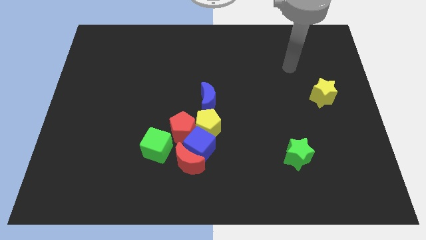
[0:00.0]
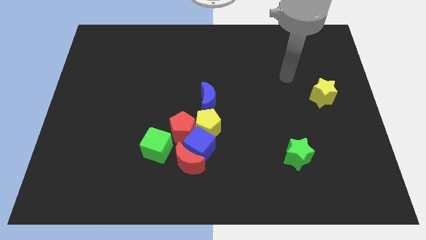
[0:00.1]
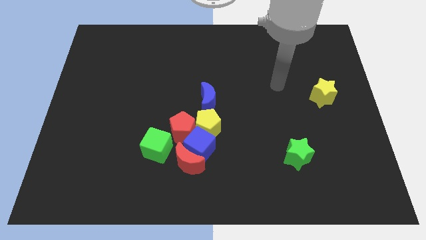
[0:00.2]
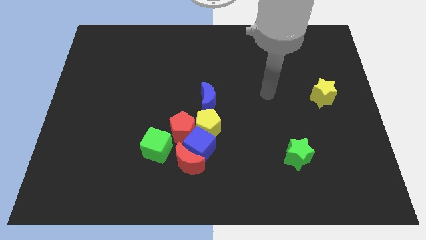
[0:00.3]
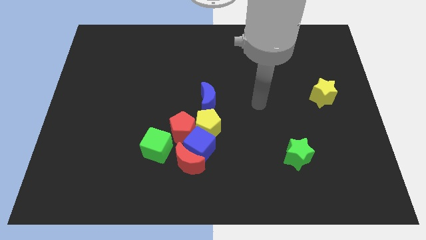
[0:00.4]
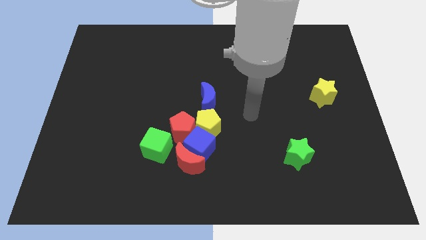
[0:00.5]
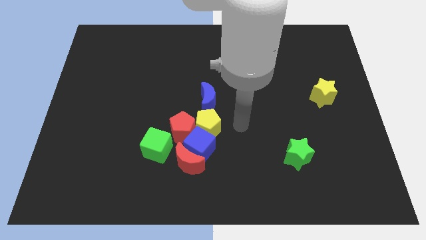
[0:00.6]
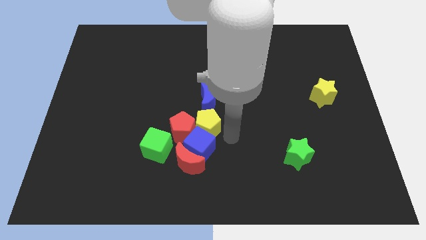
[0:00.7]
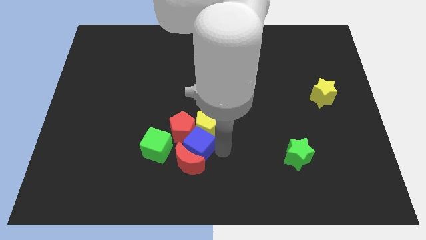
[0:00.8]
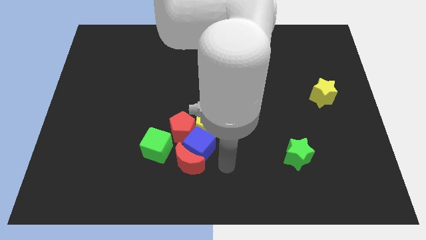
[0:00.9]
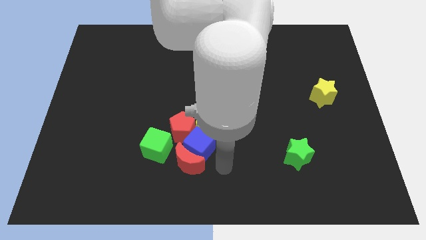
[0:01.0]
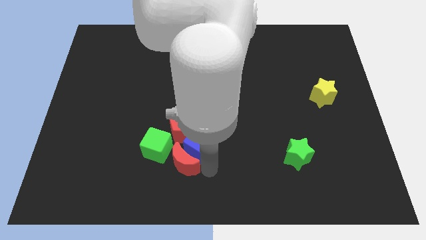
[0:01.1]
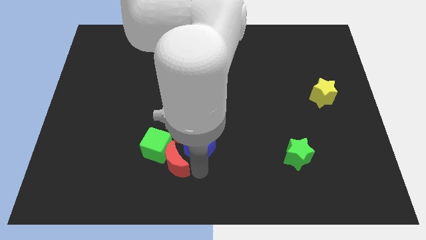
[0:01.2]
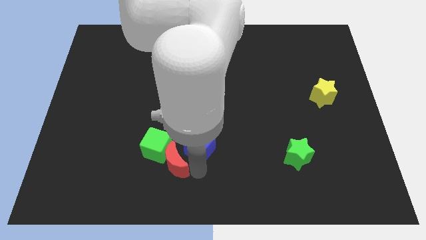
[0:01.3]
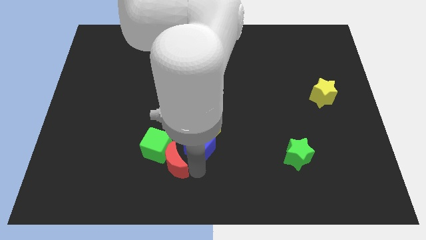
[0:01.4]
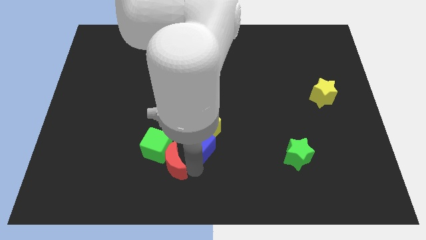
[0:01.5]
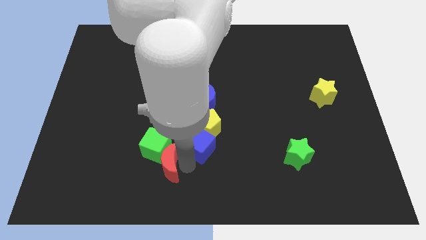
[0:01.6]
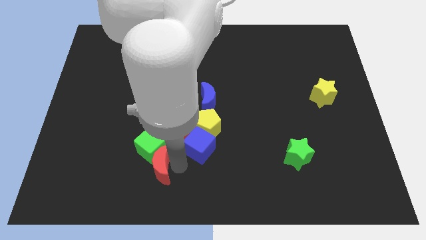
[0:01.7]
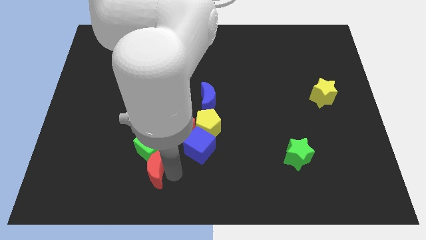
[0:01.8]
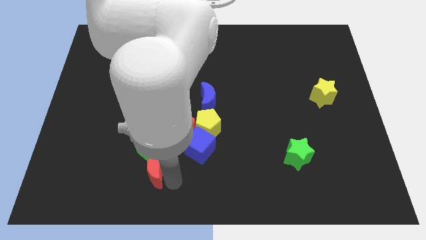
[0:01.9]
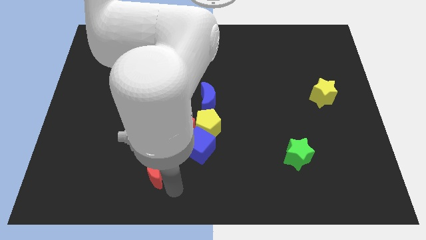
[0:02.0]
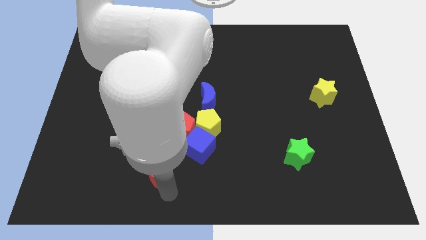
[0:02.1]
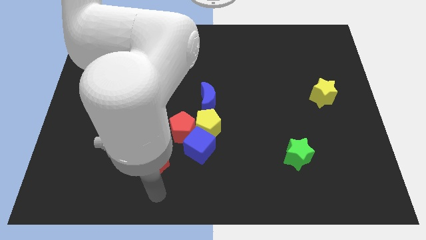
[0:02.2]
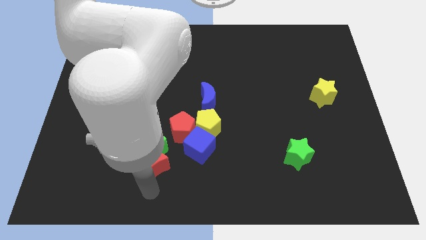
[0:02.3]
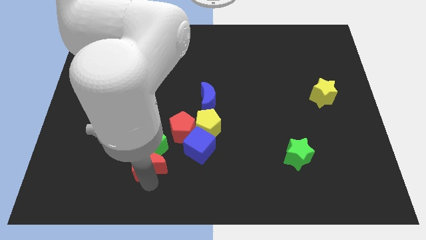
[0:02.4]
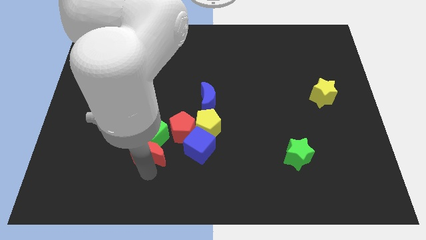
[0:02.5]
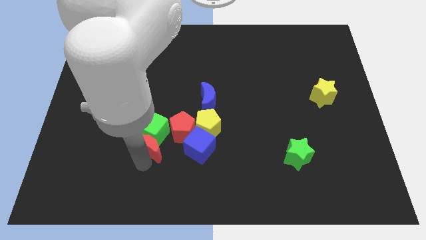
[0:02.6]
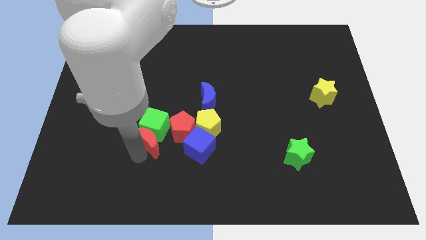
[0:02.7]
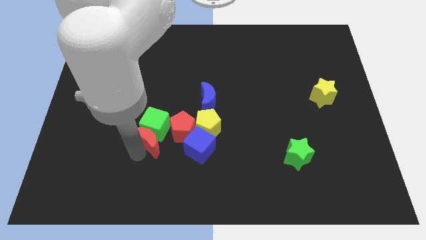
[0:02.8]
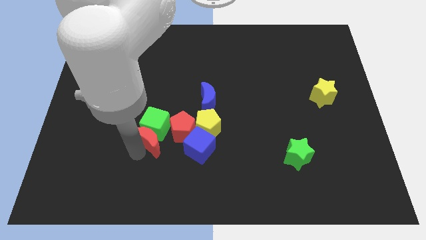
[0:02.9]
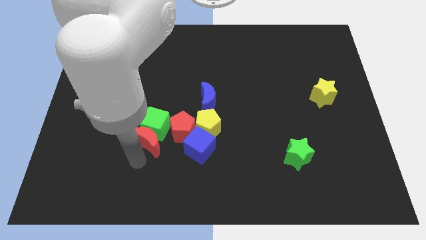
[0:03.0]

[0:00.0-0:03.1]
separate red moon from blue cube

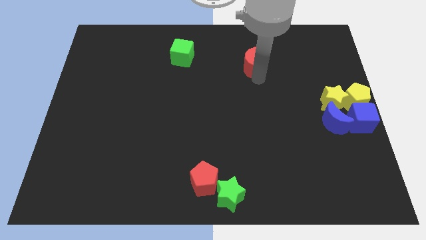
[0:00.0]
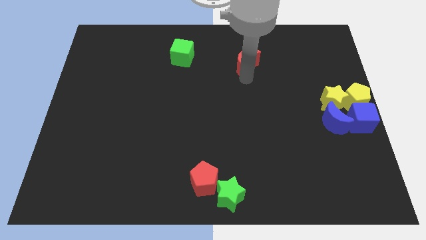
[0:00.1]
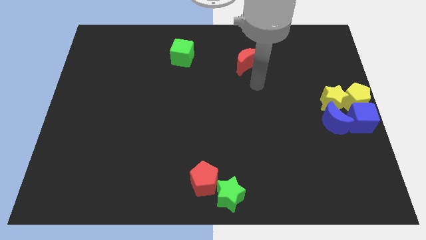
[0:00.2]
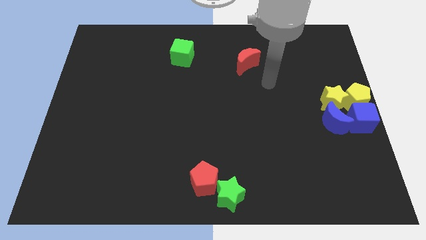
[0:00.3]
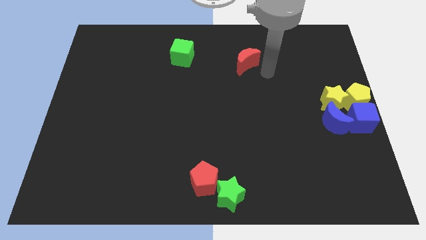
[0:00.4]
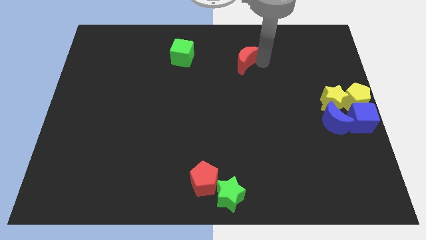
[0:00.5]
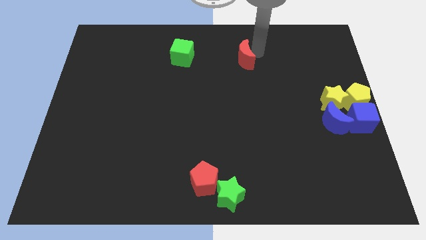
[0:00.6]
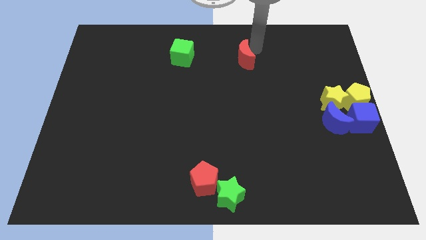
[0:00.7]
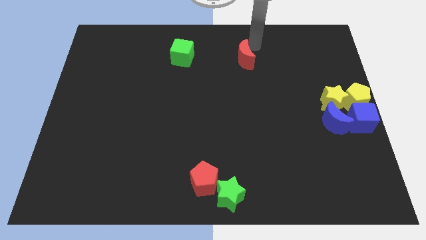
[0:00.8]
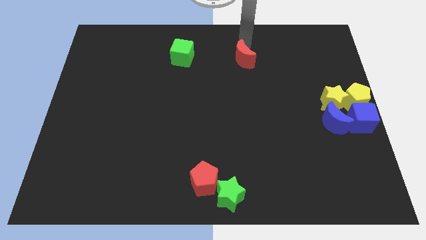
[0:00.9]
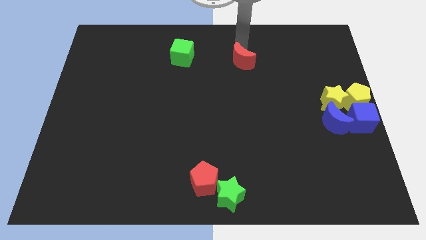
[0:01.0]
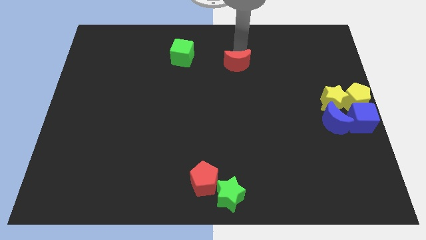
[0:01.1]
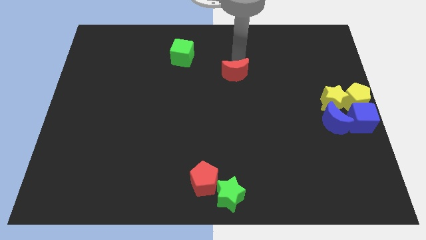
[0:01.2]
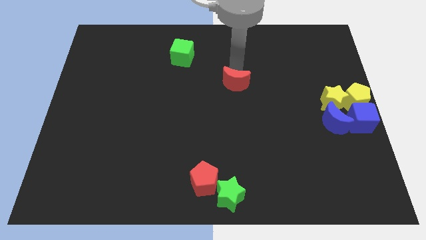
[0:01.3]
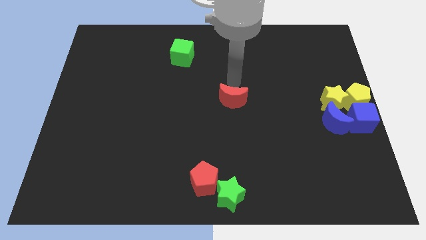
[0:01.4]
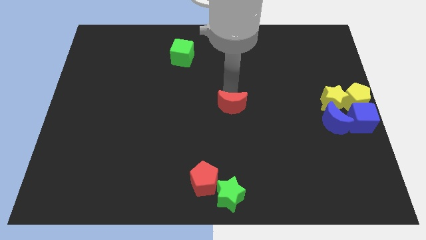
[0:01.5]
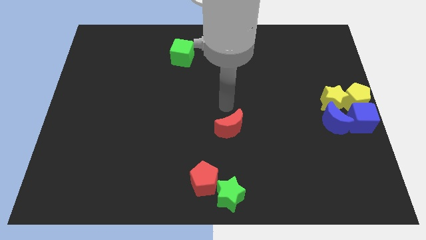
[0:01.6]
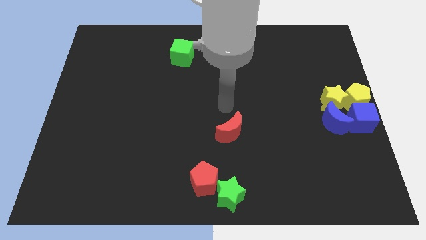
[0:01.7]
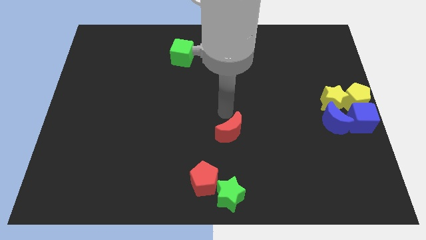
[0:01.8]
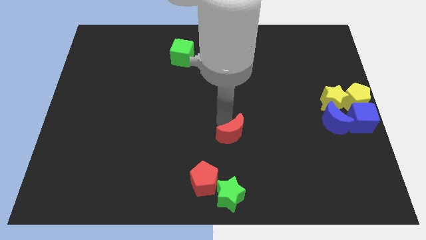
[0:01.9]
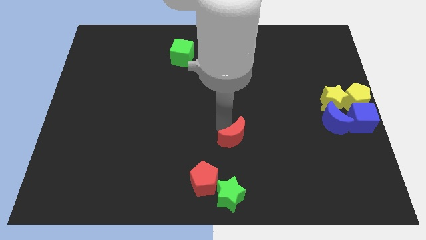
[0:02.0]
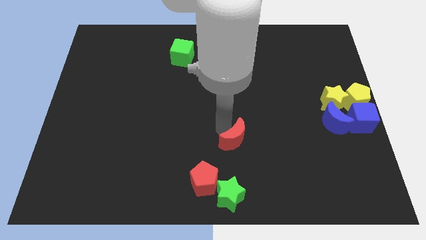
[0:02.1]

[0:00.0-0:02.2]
place the red crescent vertically above the green star

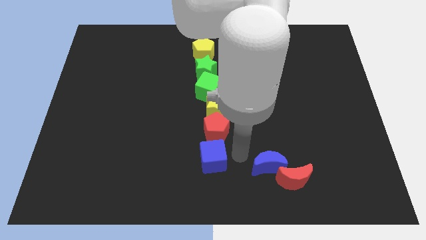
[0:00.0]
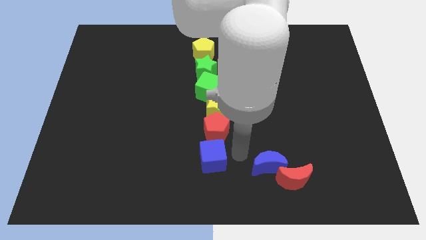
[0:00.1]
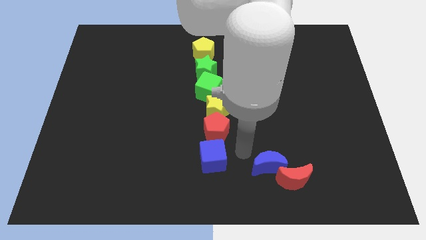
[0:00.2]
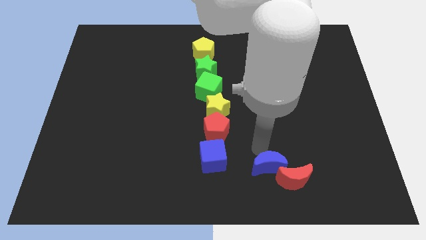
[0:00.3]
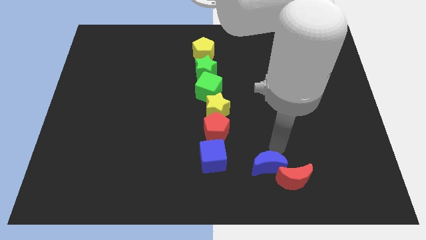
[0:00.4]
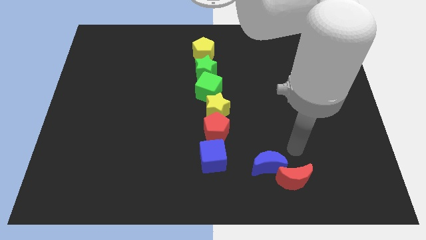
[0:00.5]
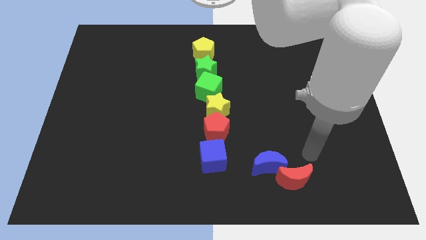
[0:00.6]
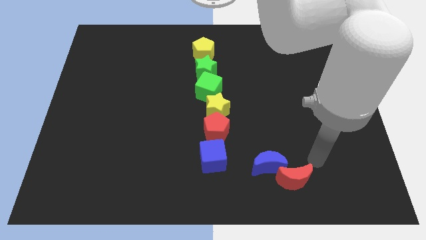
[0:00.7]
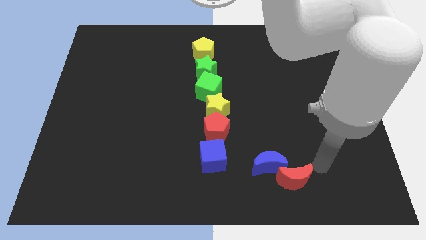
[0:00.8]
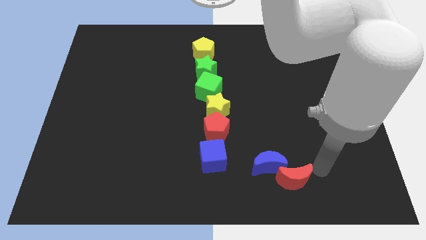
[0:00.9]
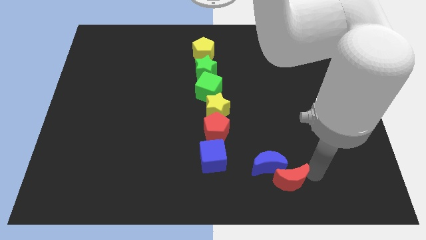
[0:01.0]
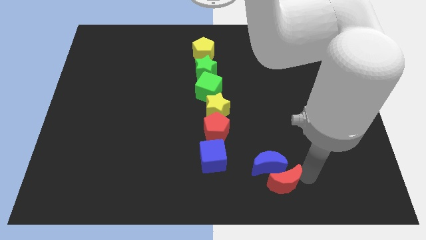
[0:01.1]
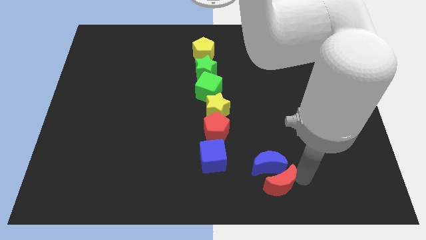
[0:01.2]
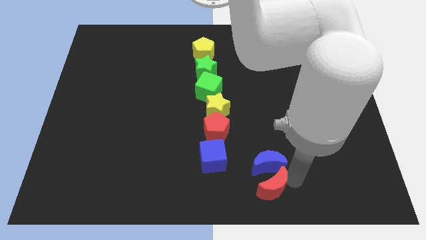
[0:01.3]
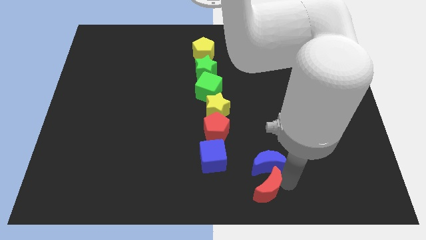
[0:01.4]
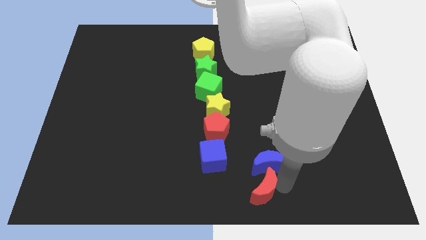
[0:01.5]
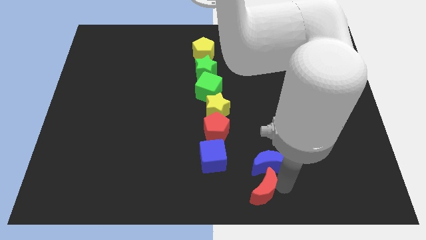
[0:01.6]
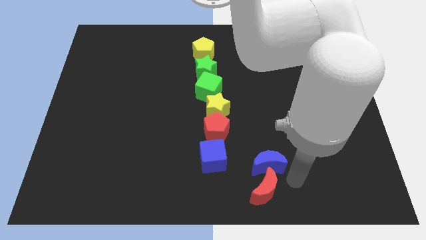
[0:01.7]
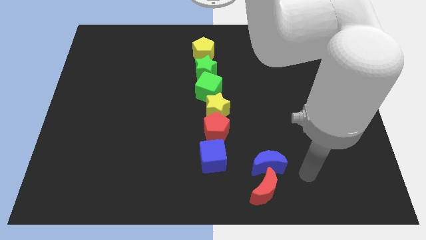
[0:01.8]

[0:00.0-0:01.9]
push the red moon below blue moon

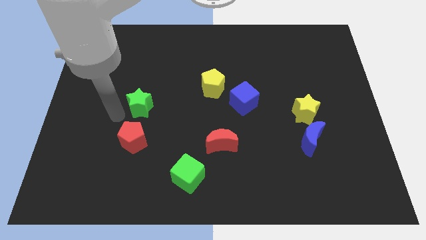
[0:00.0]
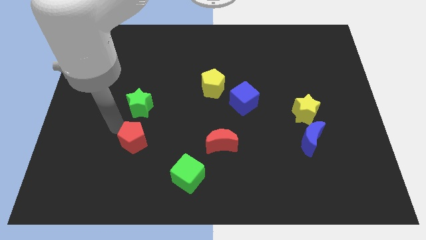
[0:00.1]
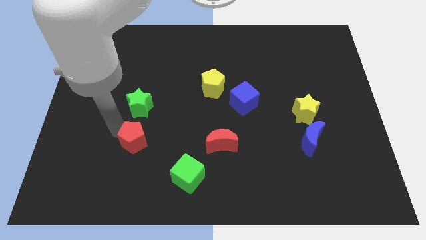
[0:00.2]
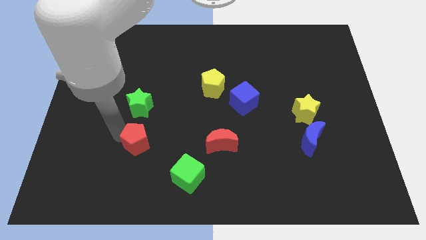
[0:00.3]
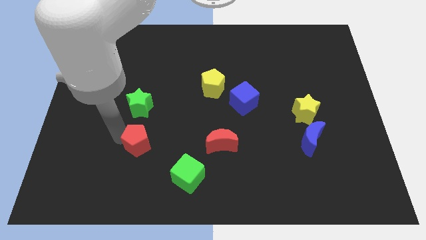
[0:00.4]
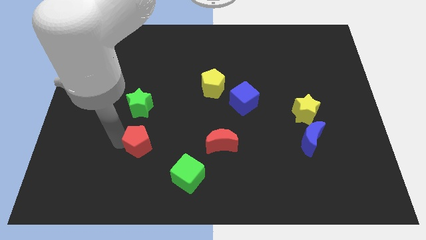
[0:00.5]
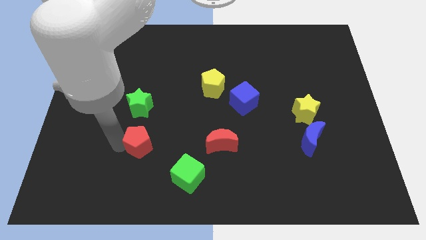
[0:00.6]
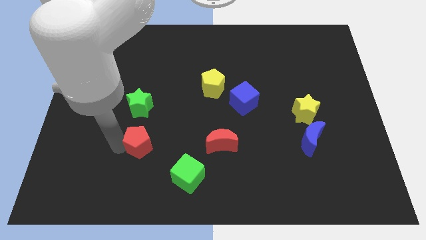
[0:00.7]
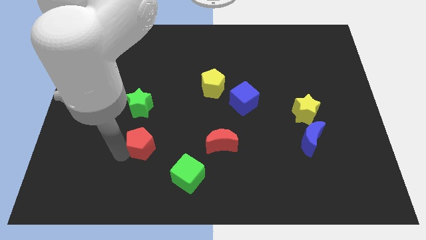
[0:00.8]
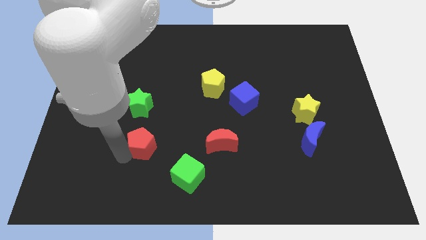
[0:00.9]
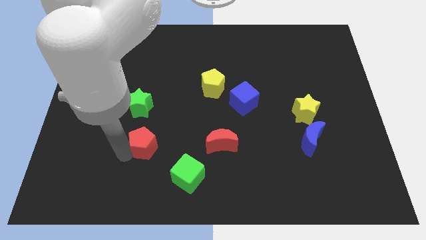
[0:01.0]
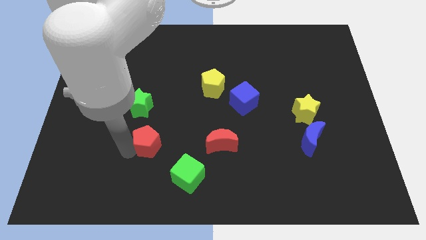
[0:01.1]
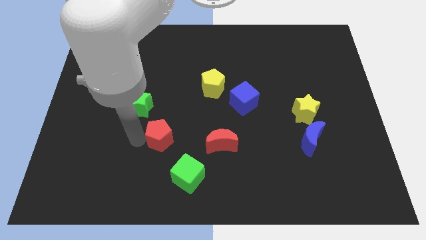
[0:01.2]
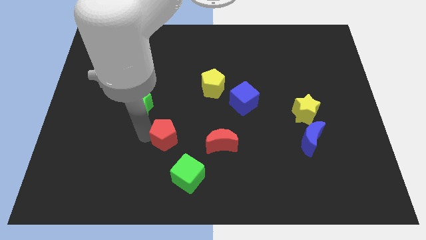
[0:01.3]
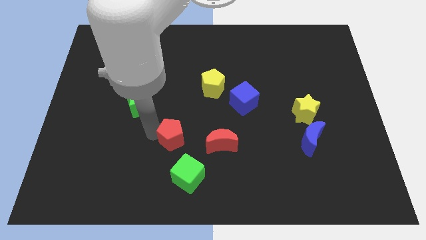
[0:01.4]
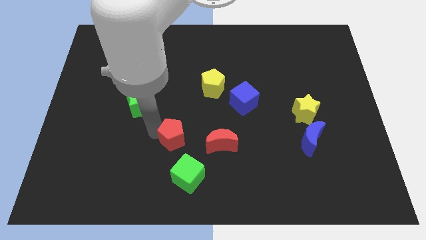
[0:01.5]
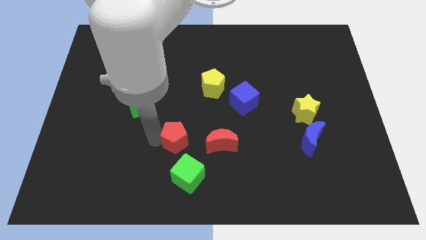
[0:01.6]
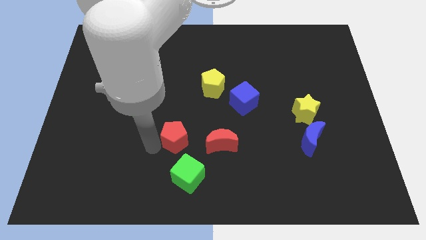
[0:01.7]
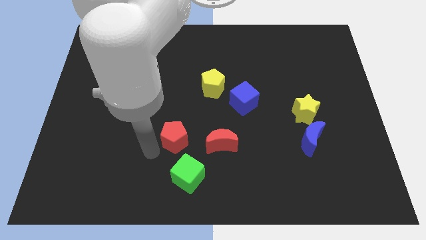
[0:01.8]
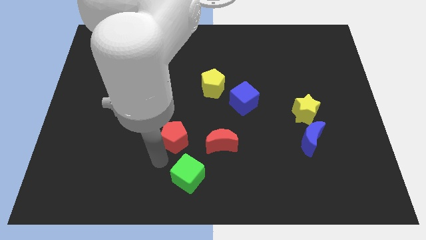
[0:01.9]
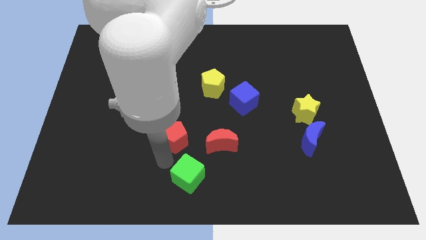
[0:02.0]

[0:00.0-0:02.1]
move the red pentagon to the left of red moon
